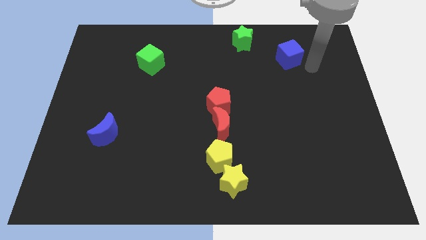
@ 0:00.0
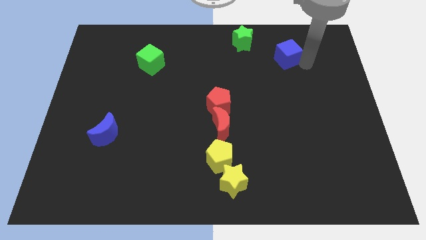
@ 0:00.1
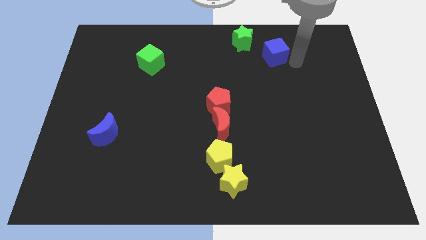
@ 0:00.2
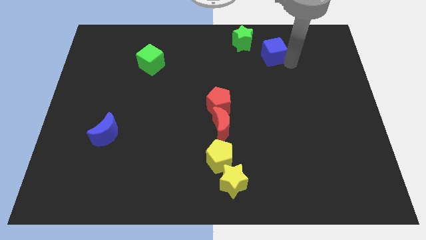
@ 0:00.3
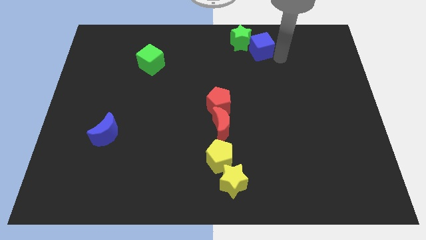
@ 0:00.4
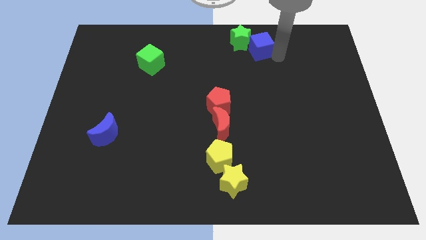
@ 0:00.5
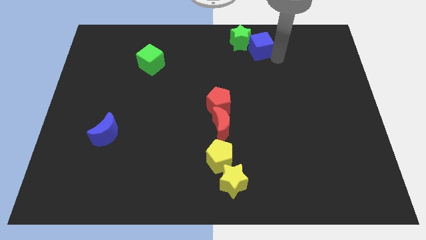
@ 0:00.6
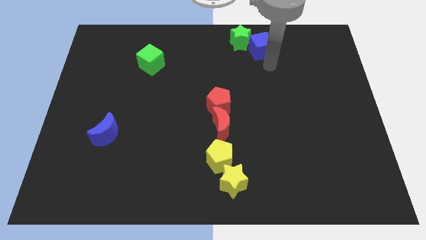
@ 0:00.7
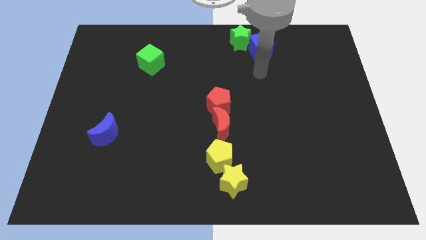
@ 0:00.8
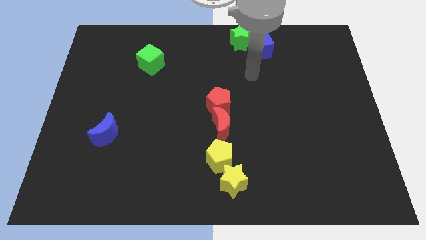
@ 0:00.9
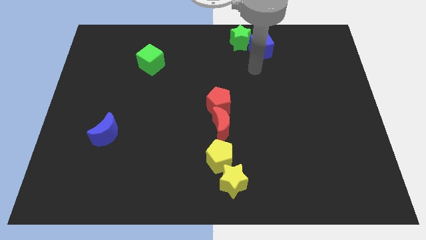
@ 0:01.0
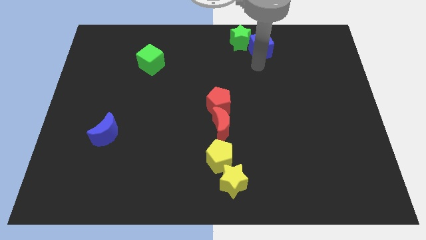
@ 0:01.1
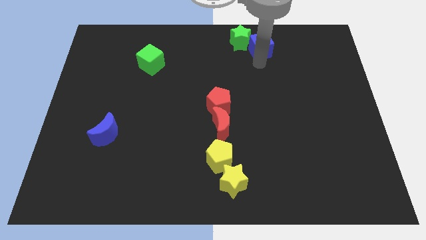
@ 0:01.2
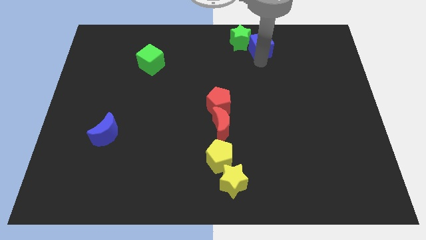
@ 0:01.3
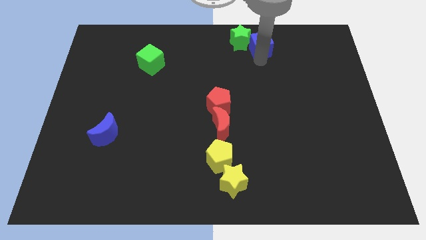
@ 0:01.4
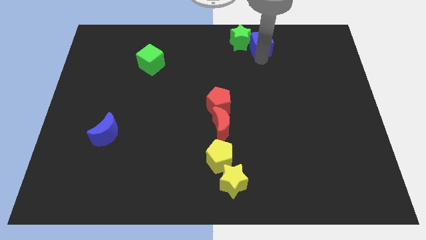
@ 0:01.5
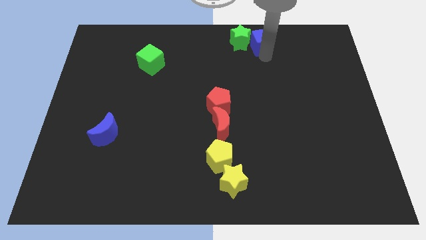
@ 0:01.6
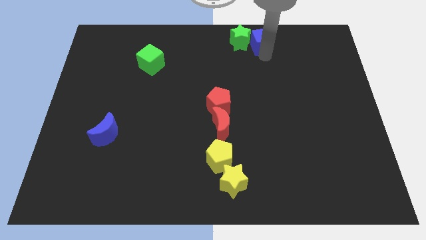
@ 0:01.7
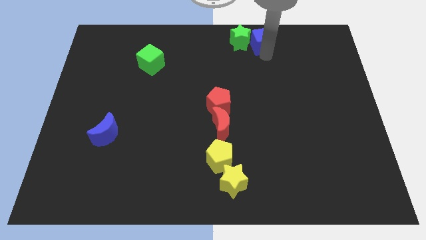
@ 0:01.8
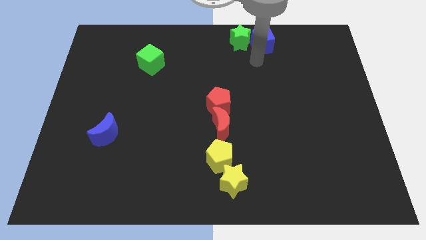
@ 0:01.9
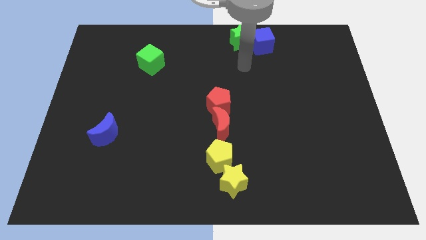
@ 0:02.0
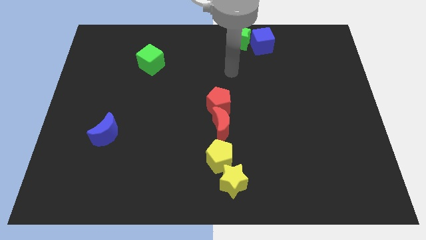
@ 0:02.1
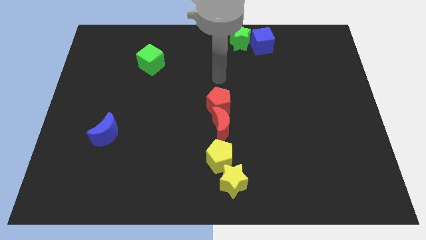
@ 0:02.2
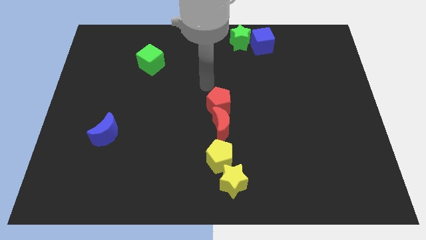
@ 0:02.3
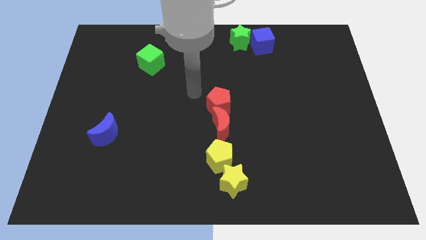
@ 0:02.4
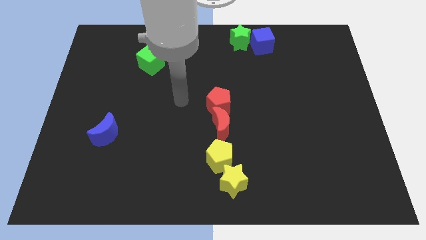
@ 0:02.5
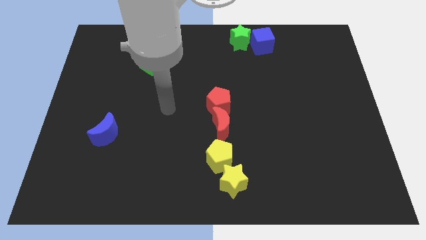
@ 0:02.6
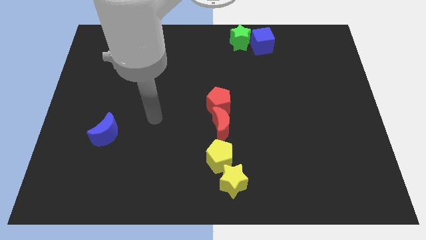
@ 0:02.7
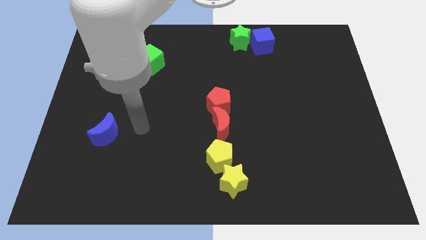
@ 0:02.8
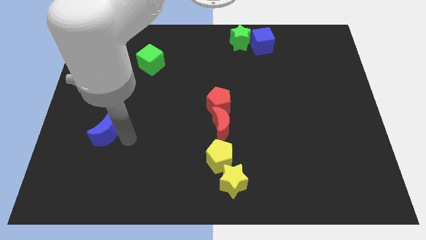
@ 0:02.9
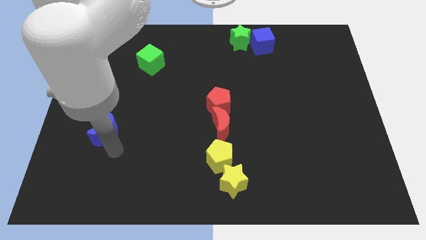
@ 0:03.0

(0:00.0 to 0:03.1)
push blue cube into green star

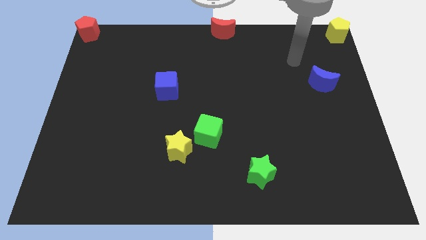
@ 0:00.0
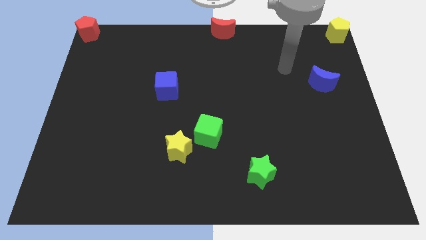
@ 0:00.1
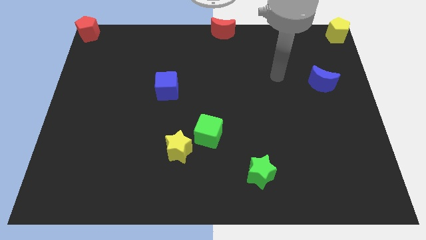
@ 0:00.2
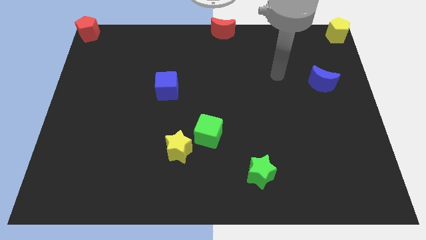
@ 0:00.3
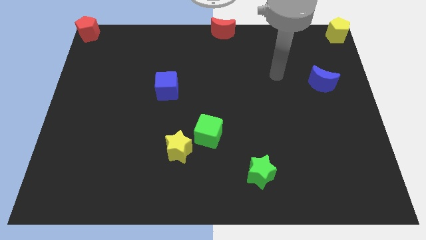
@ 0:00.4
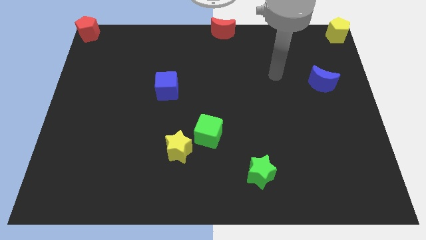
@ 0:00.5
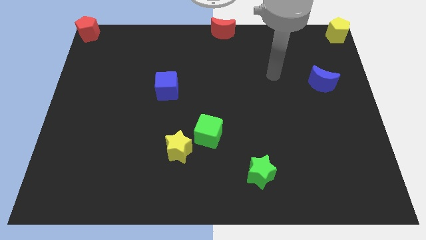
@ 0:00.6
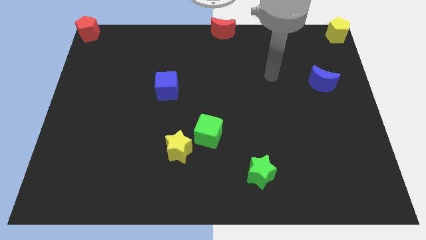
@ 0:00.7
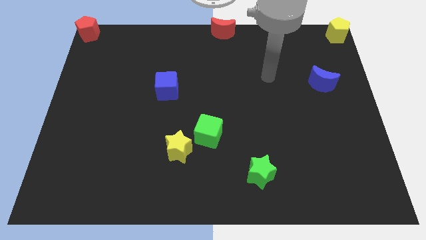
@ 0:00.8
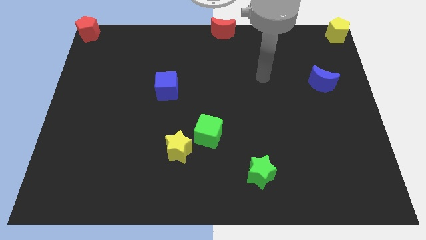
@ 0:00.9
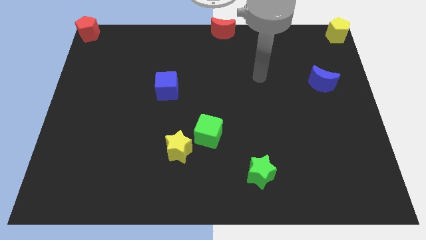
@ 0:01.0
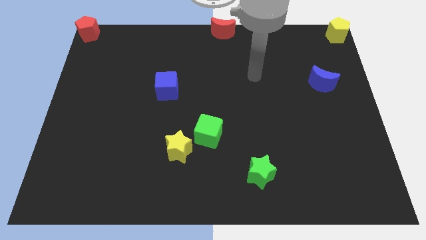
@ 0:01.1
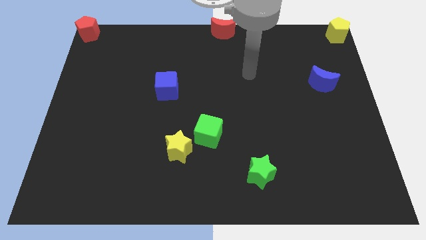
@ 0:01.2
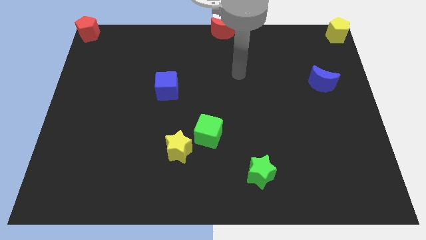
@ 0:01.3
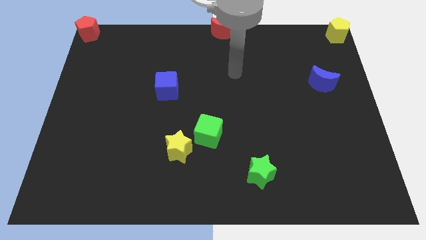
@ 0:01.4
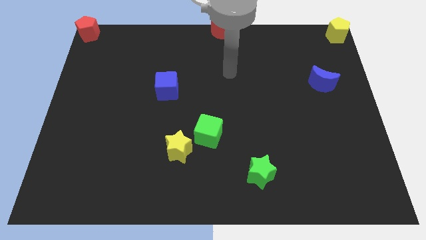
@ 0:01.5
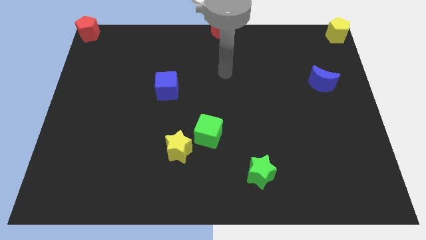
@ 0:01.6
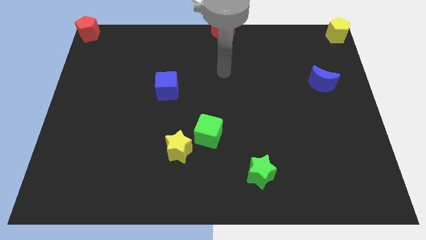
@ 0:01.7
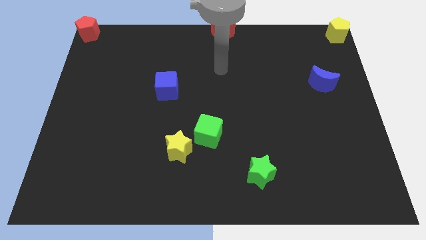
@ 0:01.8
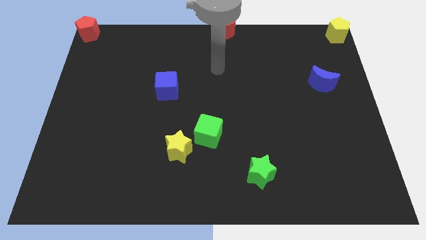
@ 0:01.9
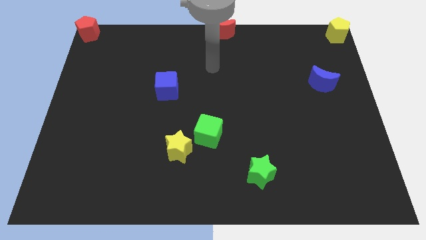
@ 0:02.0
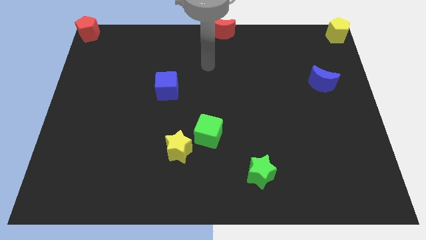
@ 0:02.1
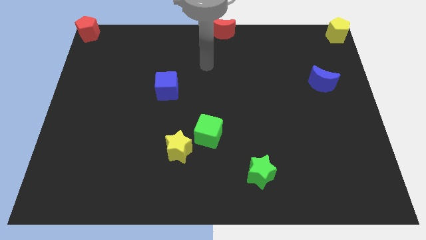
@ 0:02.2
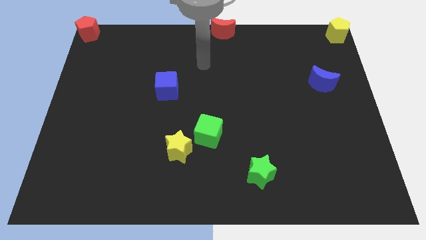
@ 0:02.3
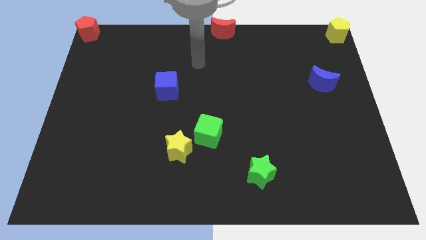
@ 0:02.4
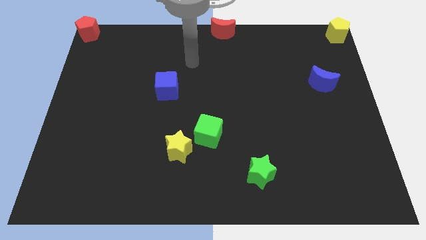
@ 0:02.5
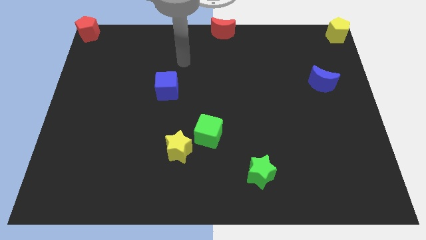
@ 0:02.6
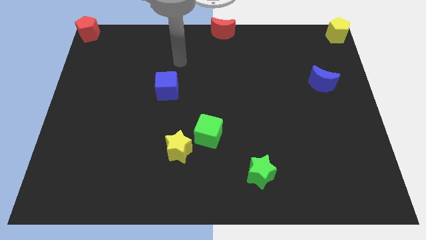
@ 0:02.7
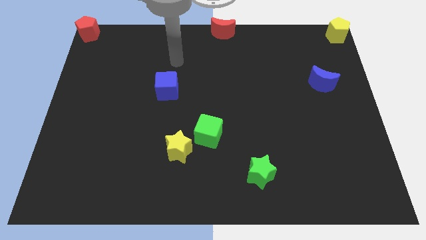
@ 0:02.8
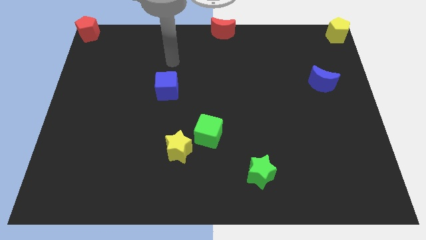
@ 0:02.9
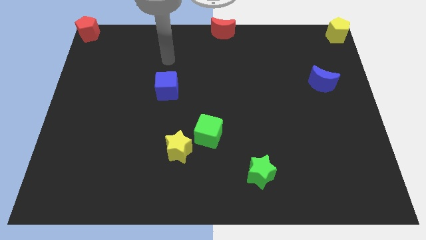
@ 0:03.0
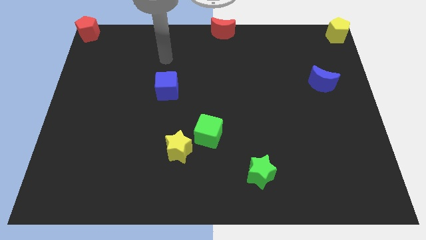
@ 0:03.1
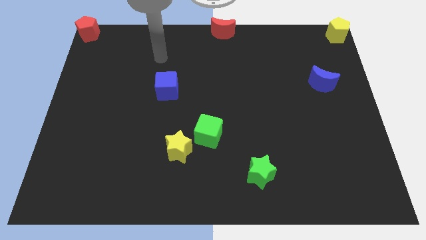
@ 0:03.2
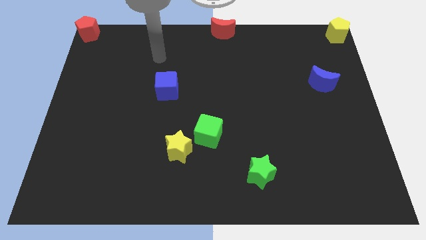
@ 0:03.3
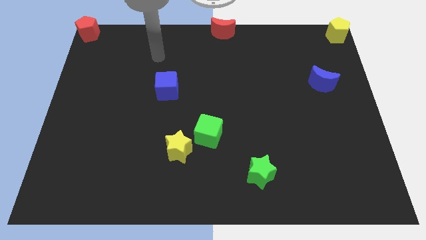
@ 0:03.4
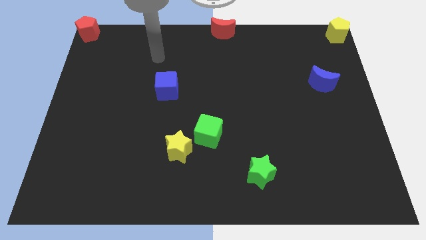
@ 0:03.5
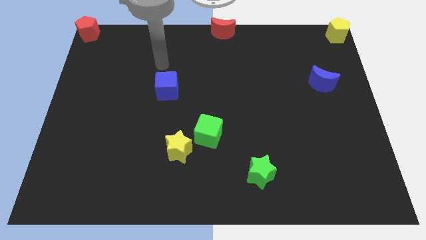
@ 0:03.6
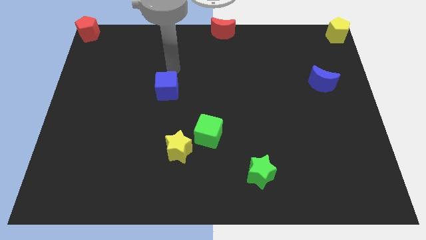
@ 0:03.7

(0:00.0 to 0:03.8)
move the arm from right top corner to the top of the blue cube

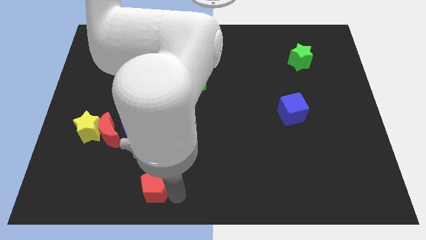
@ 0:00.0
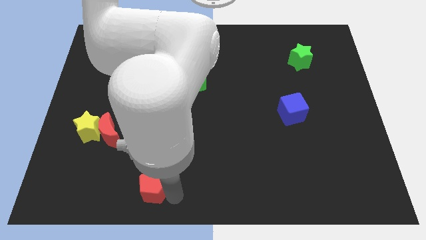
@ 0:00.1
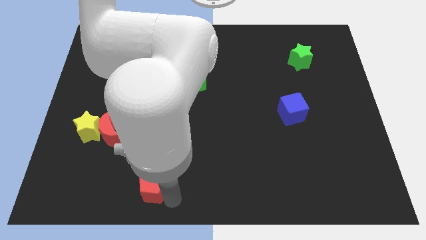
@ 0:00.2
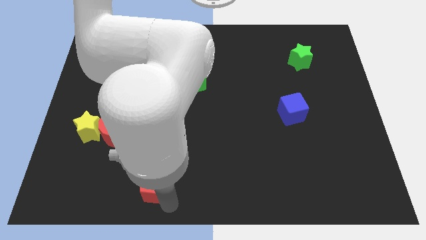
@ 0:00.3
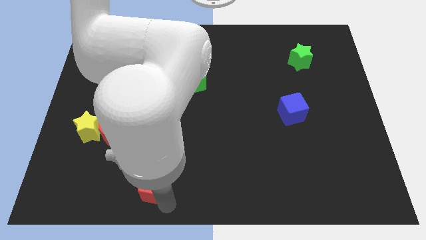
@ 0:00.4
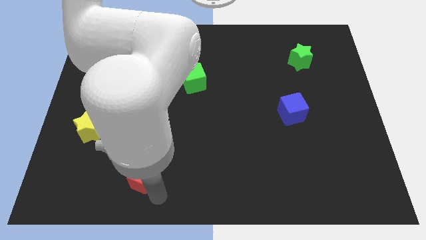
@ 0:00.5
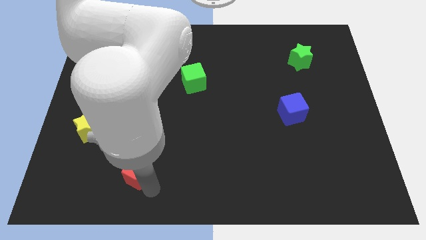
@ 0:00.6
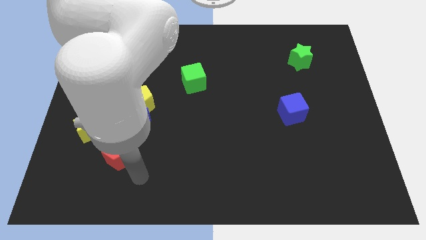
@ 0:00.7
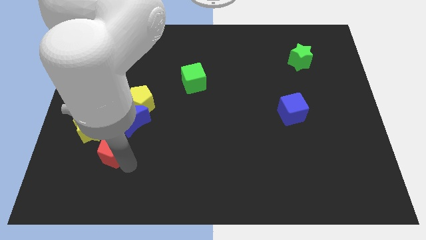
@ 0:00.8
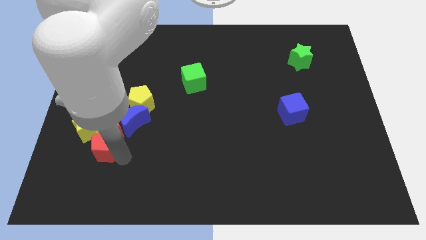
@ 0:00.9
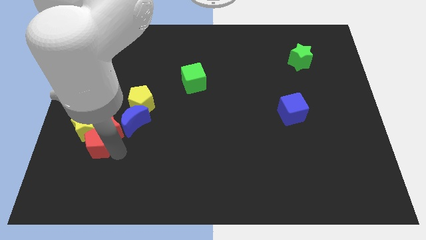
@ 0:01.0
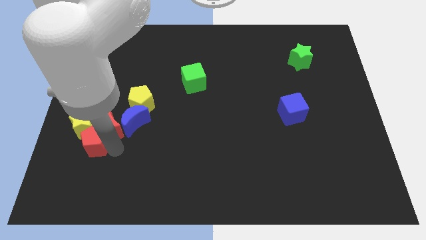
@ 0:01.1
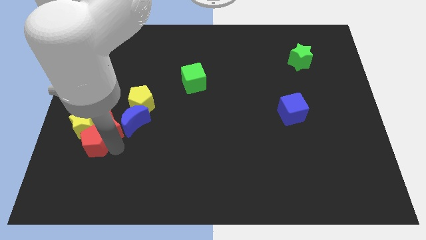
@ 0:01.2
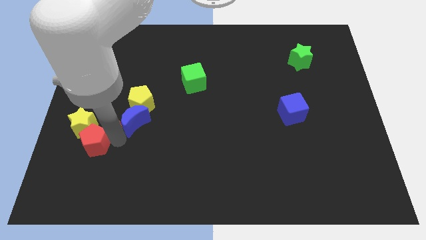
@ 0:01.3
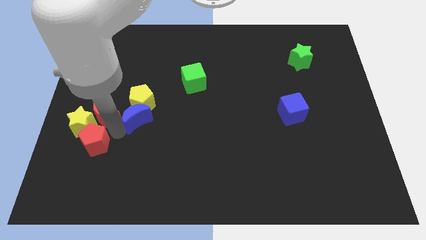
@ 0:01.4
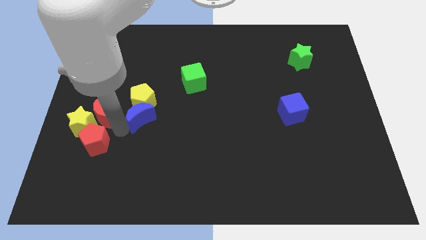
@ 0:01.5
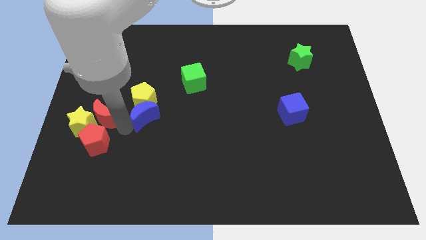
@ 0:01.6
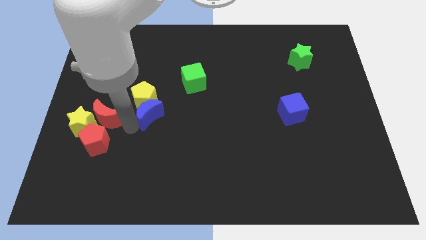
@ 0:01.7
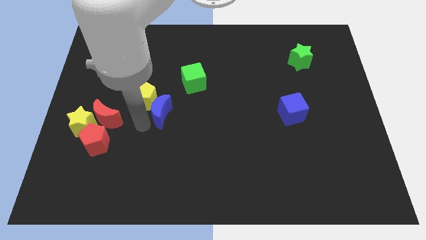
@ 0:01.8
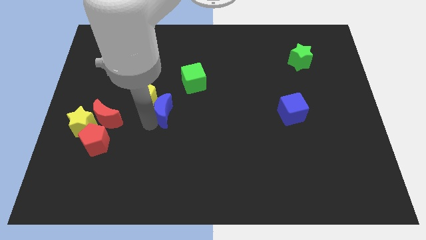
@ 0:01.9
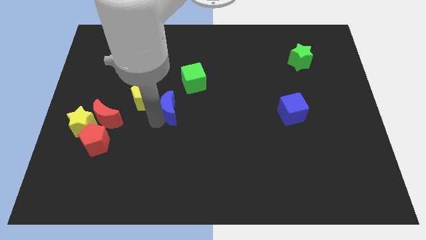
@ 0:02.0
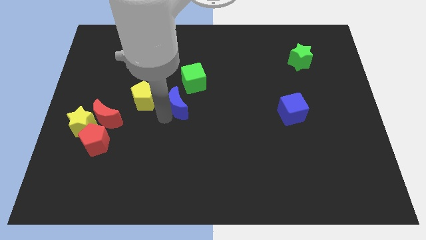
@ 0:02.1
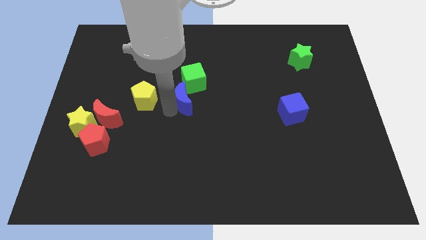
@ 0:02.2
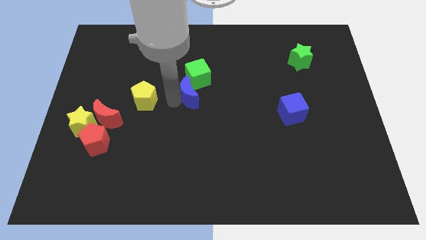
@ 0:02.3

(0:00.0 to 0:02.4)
separate the yellow pentagon and blue moon
